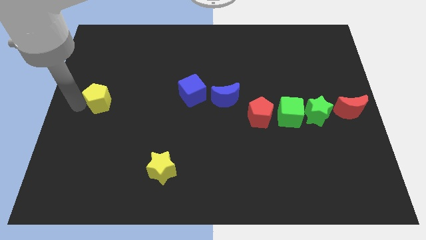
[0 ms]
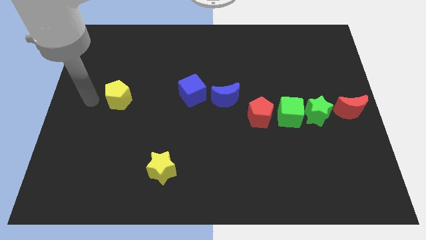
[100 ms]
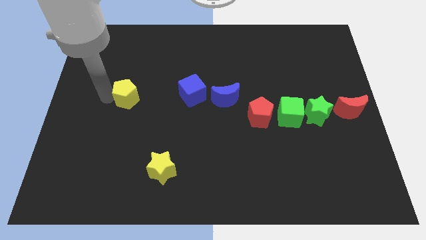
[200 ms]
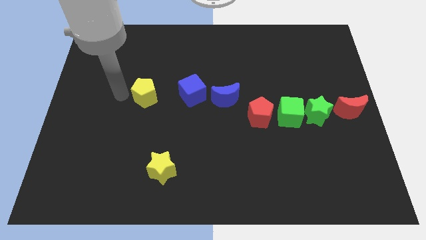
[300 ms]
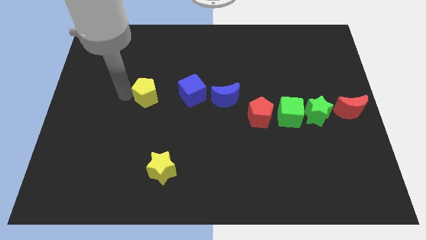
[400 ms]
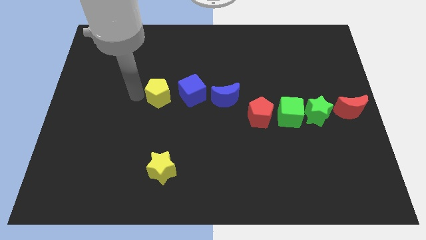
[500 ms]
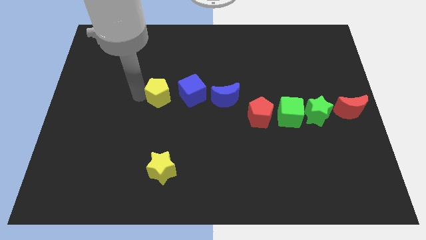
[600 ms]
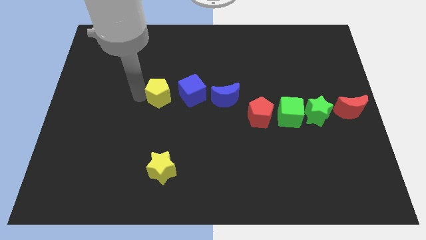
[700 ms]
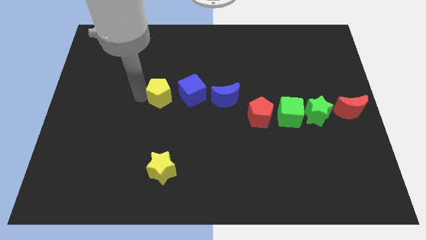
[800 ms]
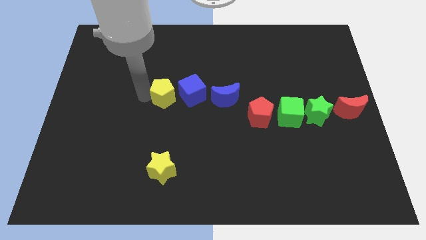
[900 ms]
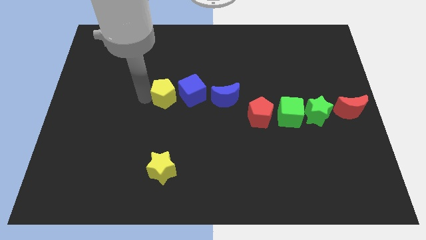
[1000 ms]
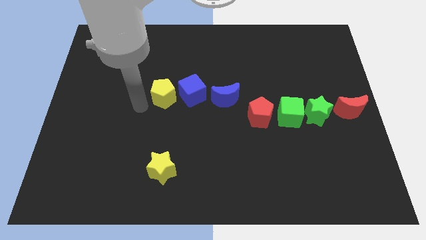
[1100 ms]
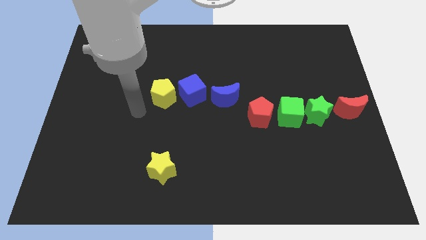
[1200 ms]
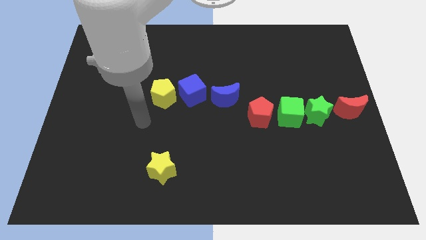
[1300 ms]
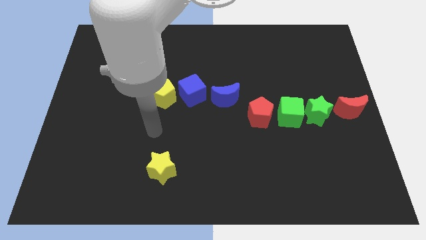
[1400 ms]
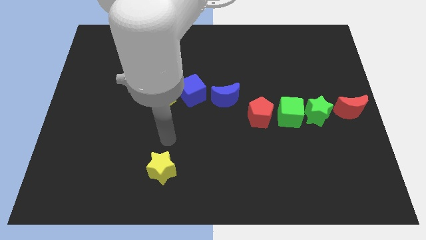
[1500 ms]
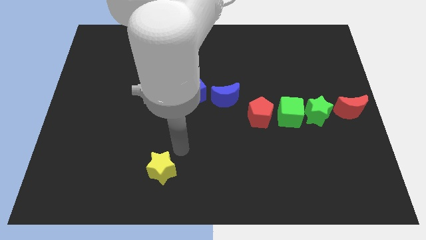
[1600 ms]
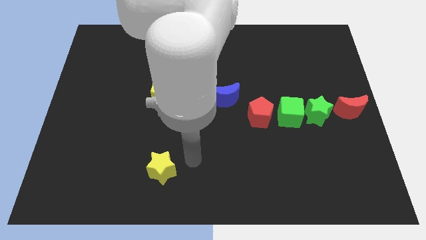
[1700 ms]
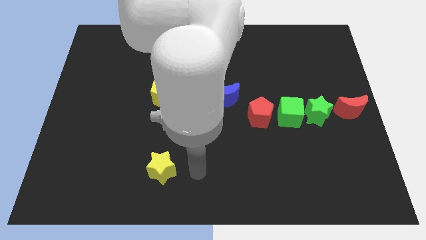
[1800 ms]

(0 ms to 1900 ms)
move the yellow pentagon towards the blue cube

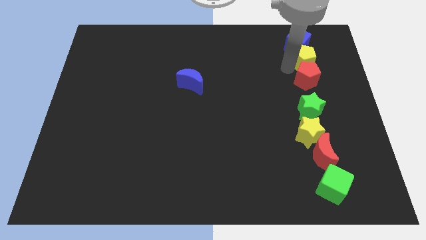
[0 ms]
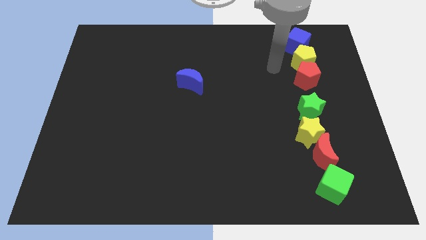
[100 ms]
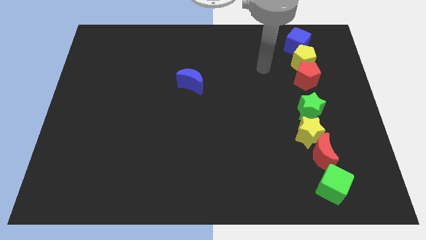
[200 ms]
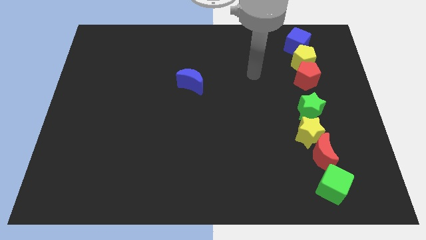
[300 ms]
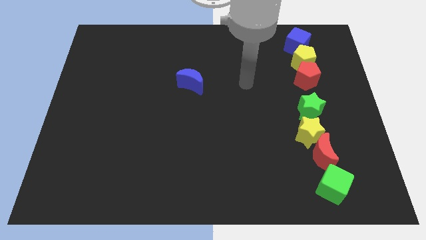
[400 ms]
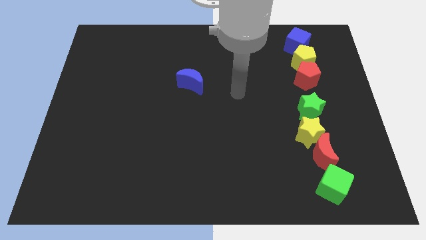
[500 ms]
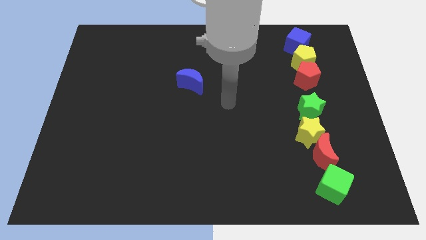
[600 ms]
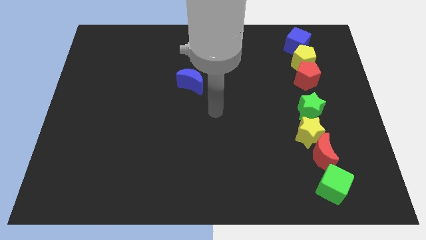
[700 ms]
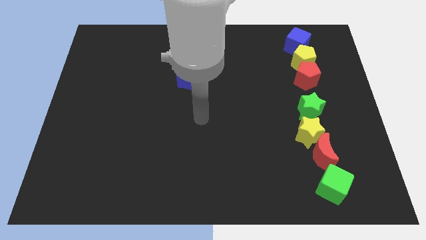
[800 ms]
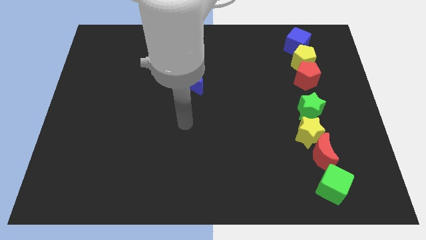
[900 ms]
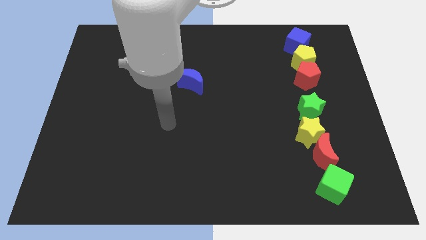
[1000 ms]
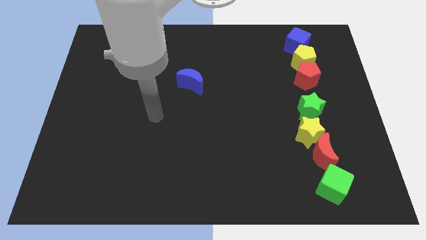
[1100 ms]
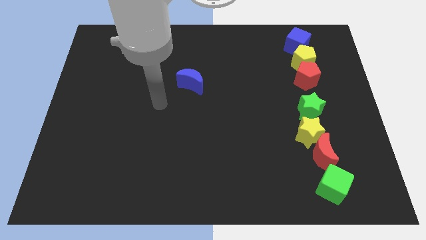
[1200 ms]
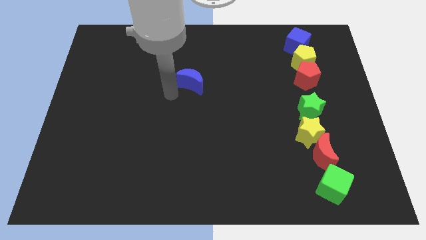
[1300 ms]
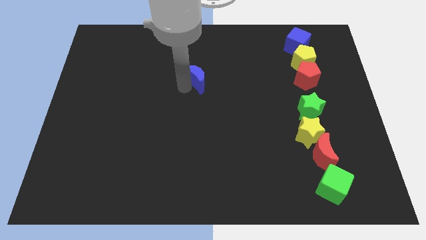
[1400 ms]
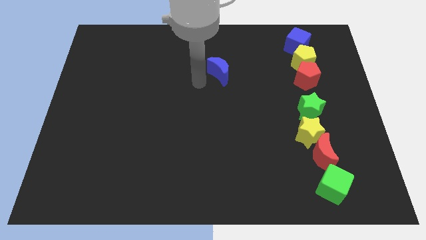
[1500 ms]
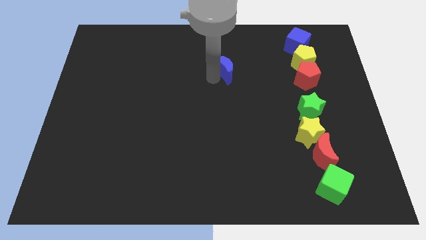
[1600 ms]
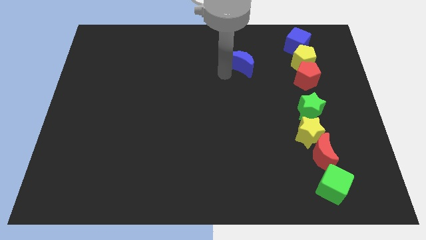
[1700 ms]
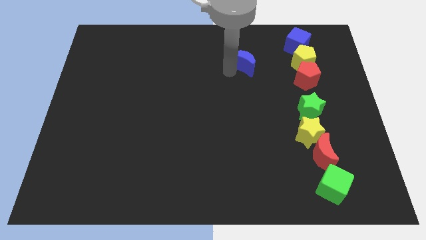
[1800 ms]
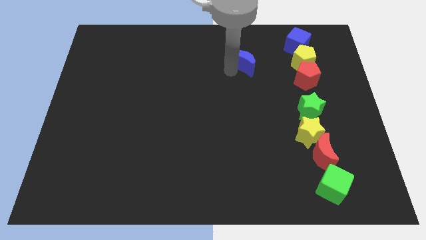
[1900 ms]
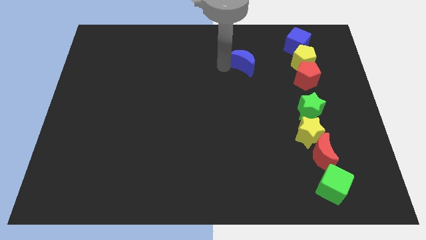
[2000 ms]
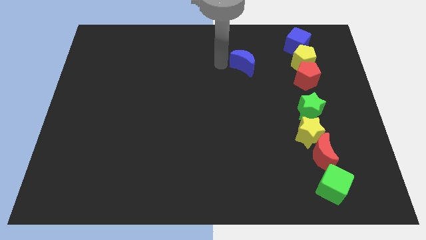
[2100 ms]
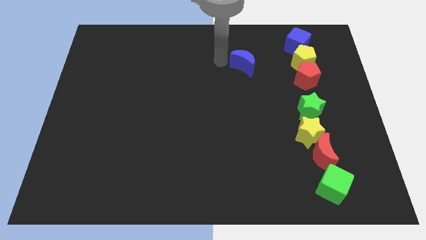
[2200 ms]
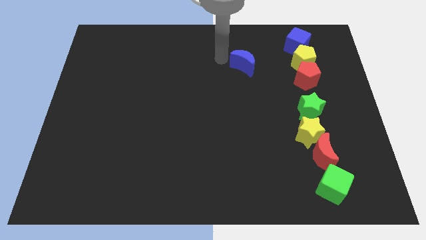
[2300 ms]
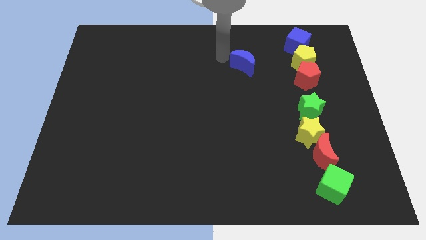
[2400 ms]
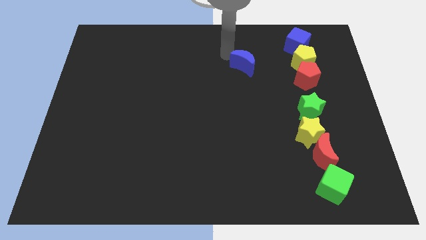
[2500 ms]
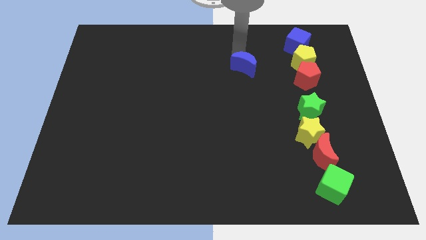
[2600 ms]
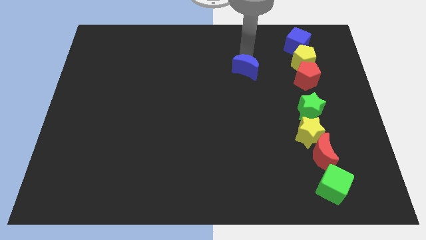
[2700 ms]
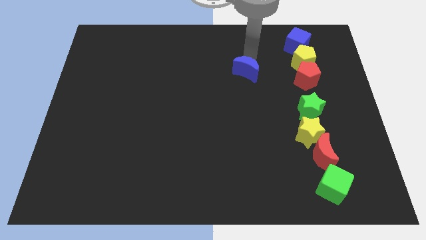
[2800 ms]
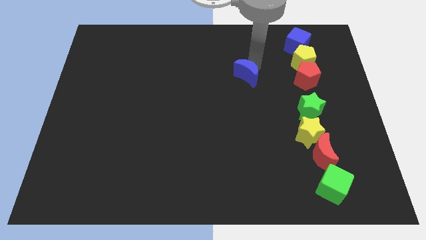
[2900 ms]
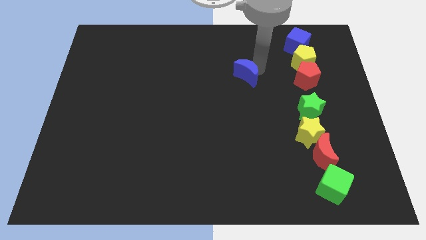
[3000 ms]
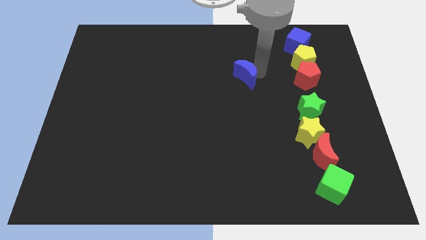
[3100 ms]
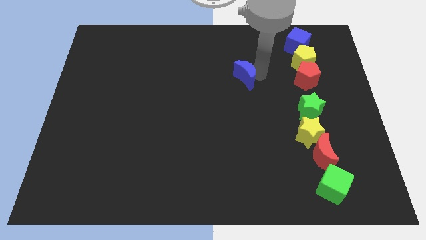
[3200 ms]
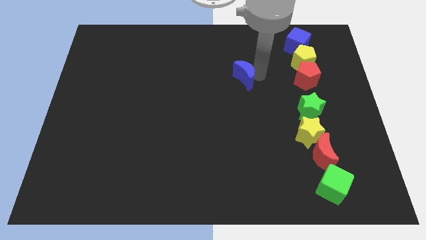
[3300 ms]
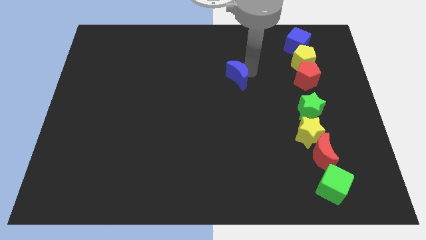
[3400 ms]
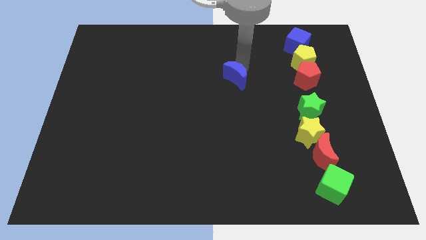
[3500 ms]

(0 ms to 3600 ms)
move blue crescent diagonally towards center

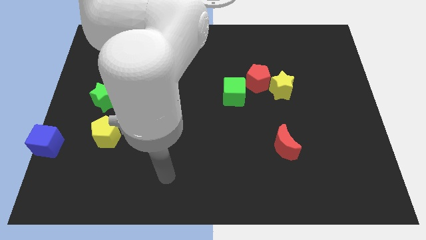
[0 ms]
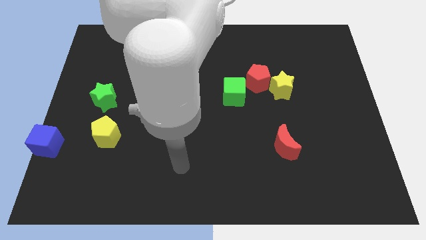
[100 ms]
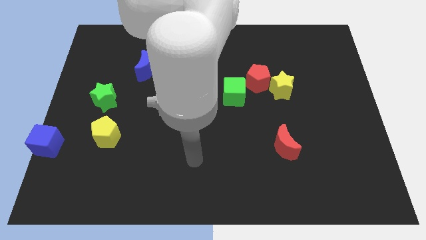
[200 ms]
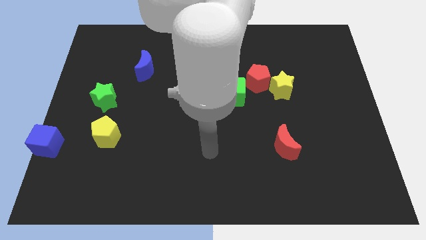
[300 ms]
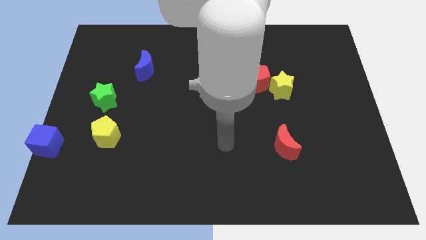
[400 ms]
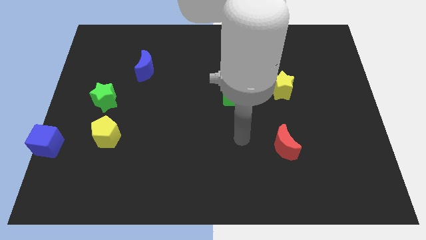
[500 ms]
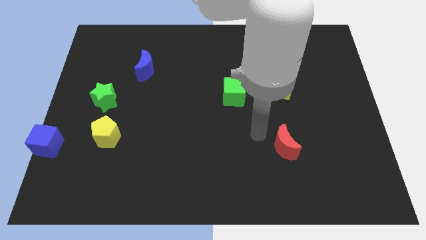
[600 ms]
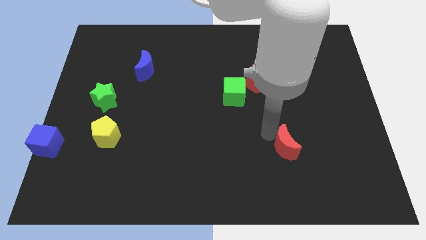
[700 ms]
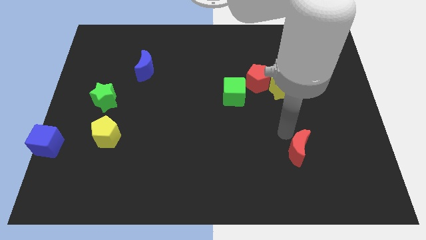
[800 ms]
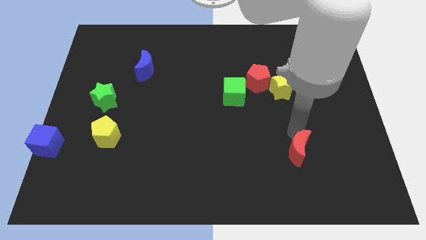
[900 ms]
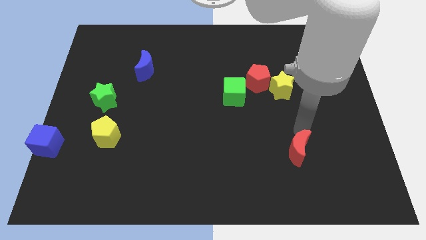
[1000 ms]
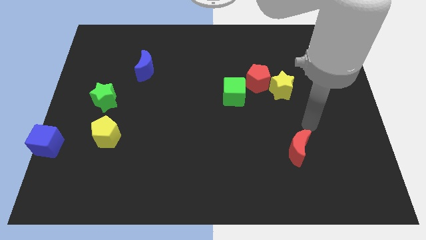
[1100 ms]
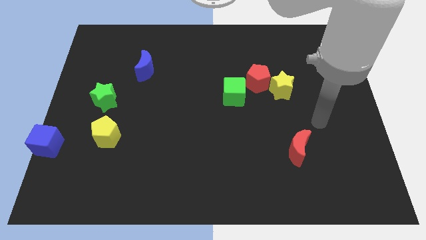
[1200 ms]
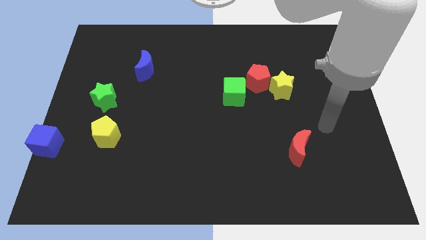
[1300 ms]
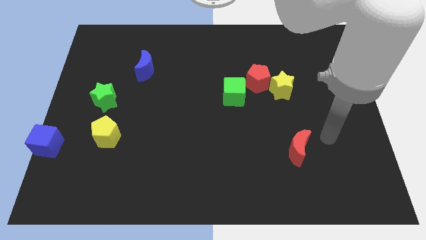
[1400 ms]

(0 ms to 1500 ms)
move the red crescent vertically below the yellow star

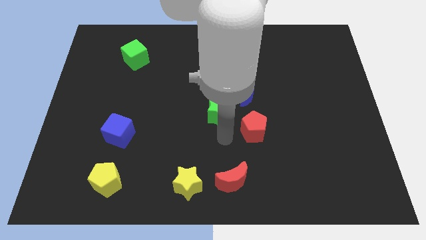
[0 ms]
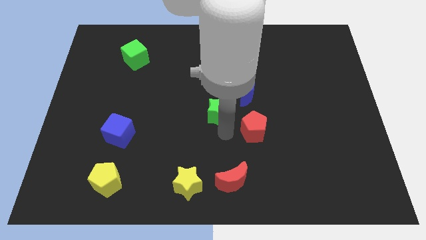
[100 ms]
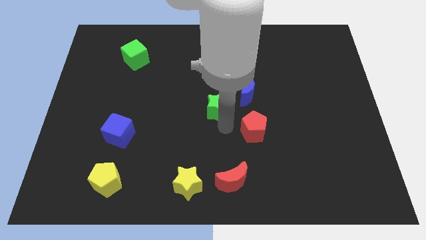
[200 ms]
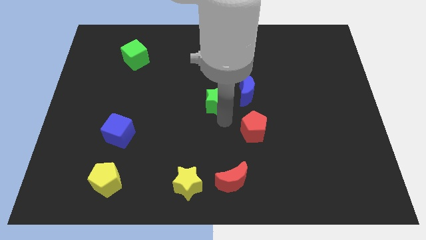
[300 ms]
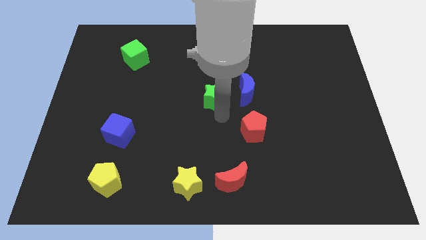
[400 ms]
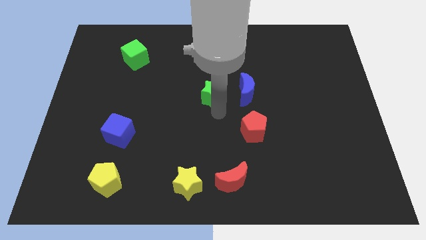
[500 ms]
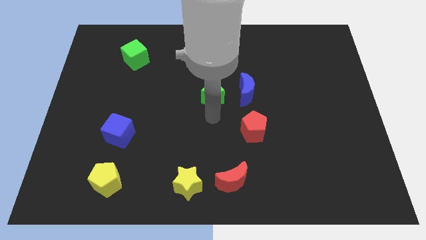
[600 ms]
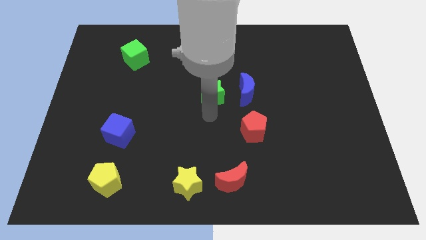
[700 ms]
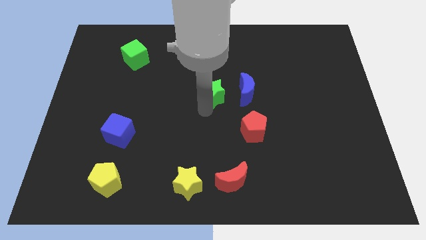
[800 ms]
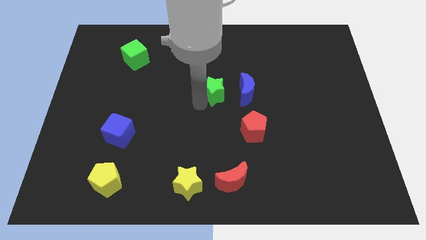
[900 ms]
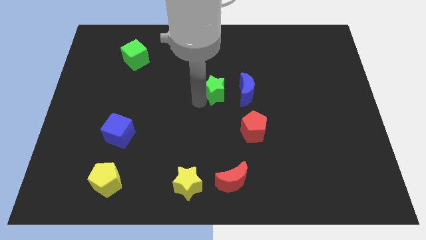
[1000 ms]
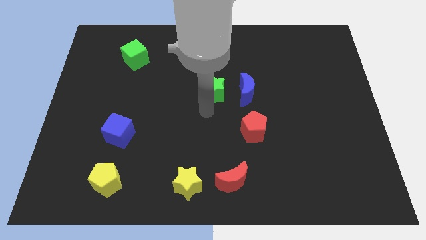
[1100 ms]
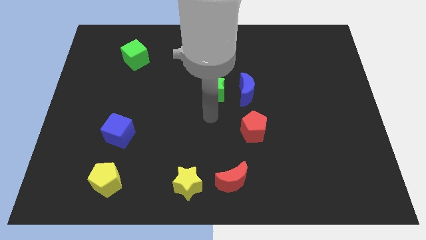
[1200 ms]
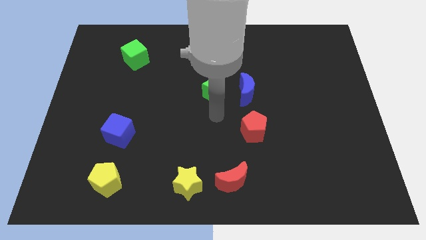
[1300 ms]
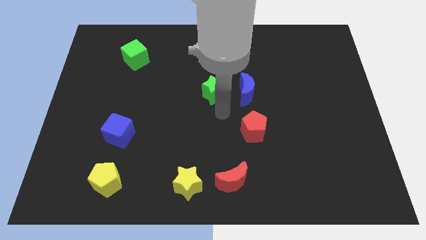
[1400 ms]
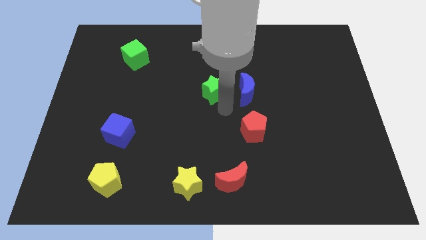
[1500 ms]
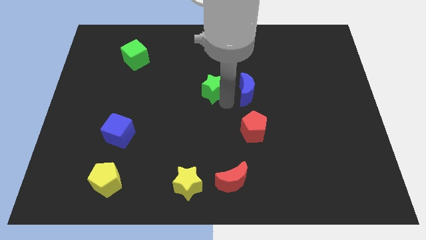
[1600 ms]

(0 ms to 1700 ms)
place the green star left to the blue moon

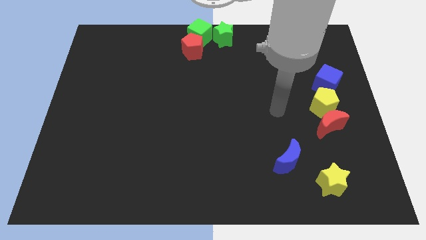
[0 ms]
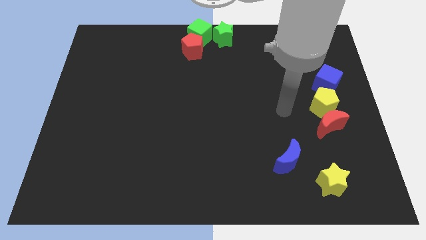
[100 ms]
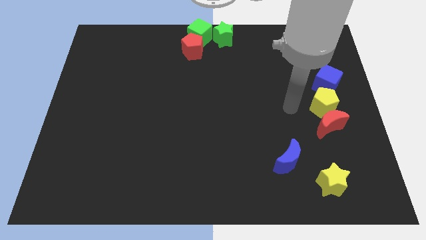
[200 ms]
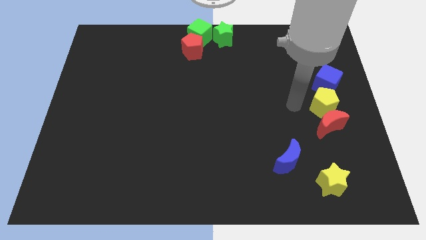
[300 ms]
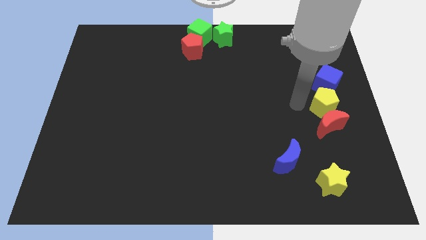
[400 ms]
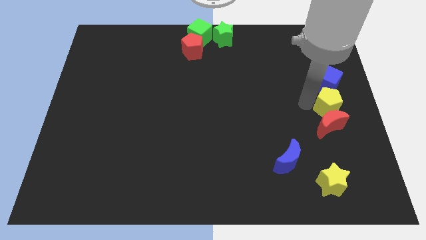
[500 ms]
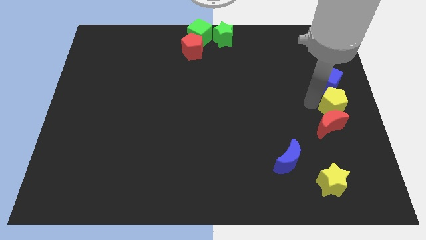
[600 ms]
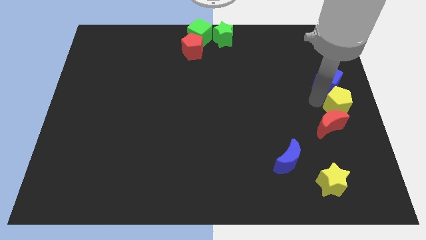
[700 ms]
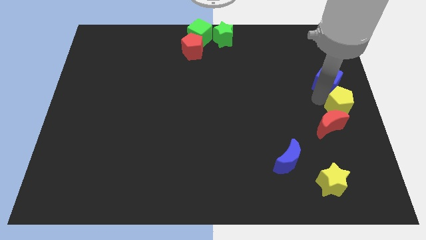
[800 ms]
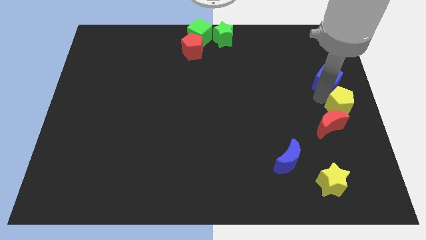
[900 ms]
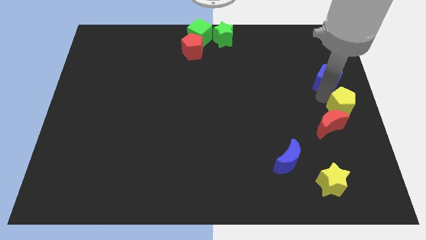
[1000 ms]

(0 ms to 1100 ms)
disturb the yellow pentagon
